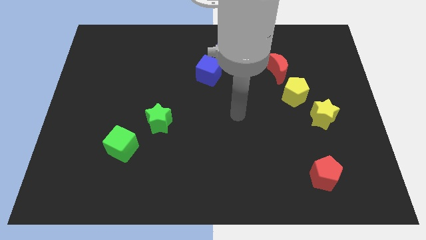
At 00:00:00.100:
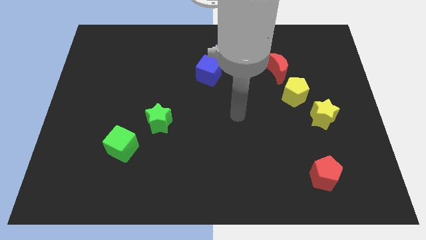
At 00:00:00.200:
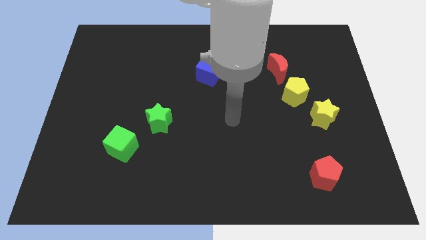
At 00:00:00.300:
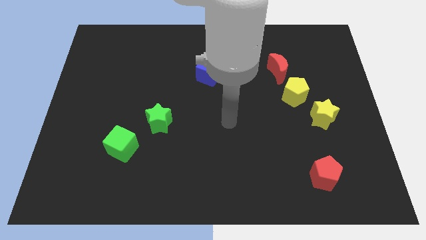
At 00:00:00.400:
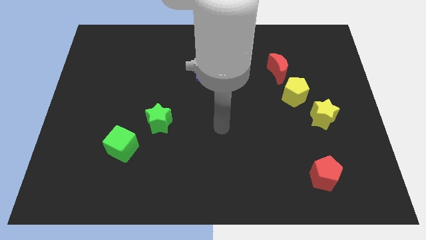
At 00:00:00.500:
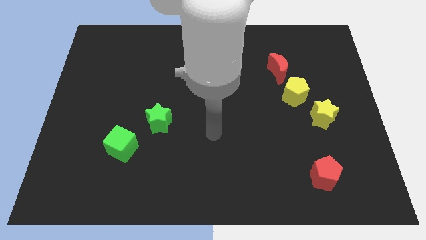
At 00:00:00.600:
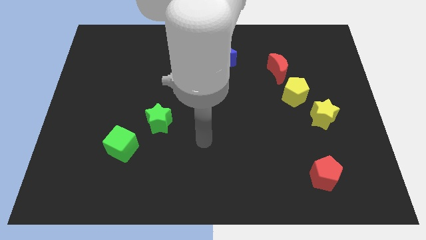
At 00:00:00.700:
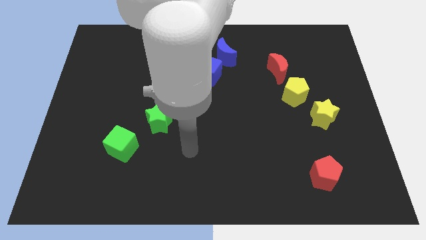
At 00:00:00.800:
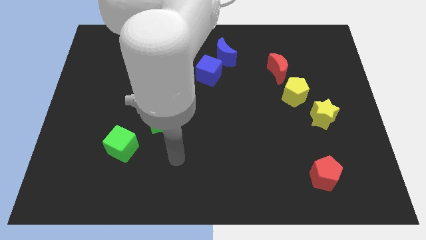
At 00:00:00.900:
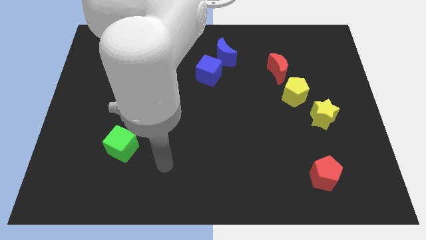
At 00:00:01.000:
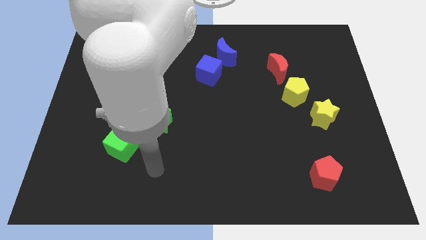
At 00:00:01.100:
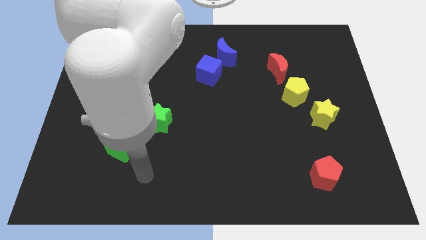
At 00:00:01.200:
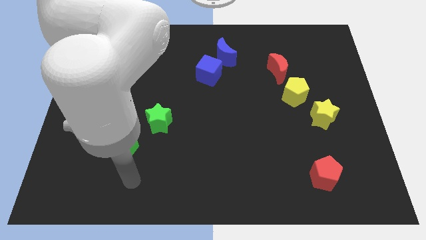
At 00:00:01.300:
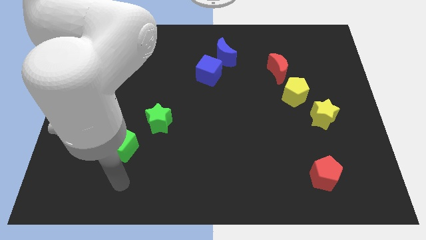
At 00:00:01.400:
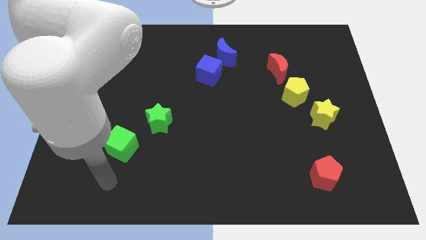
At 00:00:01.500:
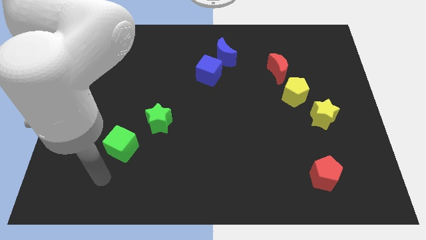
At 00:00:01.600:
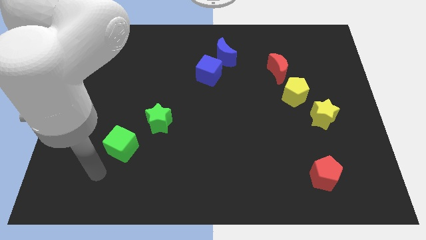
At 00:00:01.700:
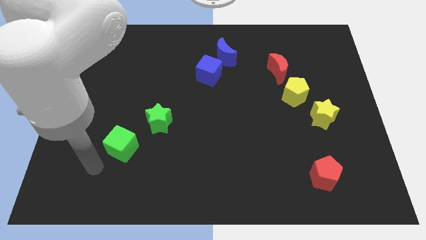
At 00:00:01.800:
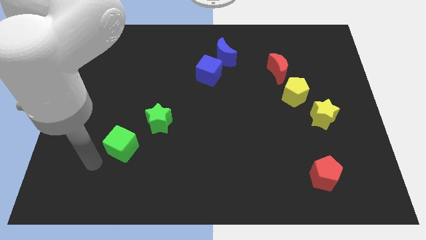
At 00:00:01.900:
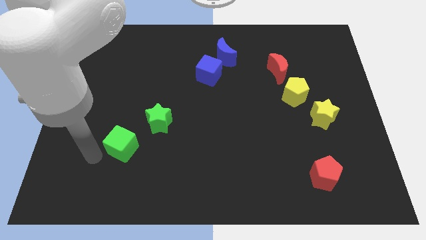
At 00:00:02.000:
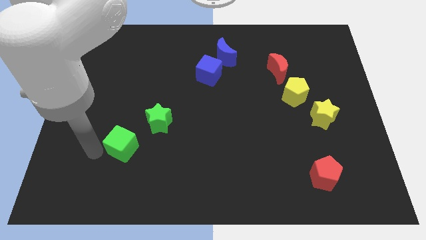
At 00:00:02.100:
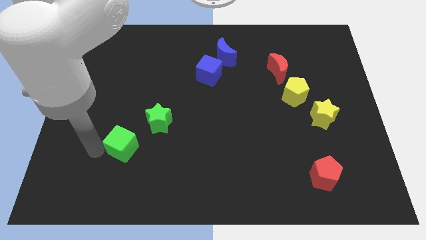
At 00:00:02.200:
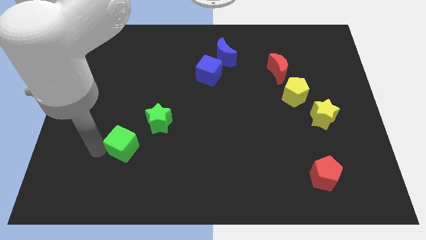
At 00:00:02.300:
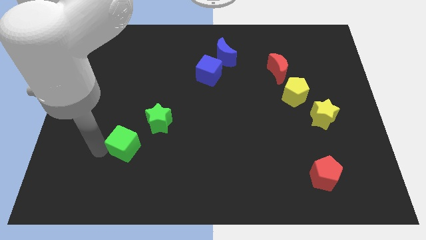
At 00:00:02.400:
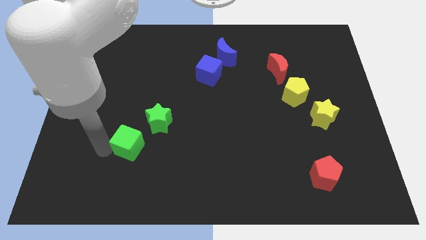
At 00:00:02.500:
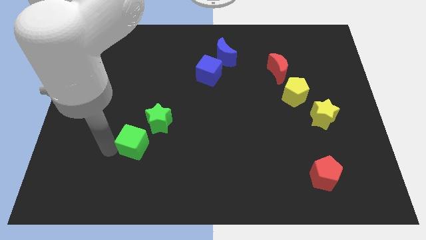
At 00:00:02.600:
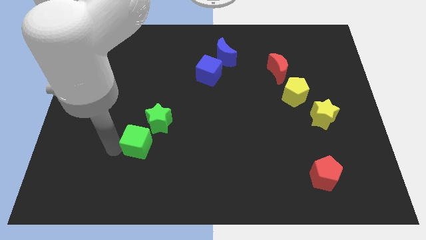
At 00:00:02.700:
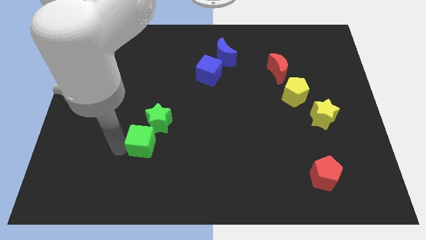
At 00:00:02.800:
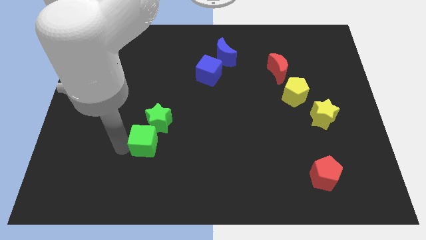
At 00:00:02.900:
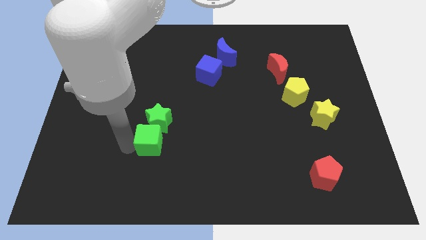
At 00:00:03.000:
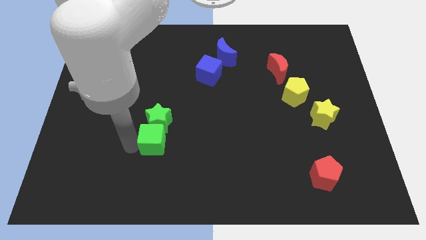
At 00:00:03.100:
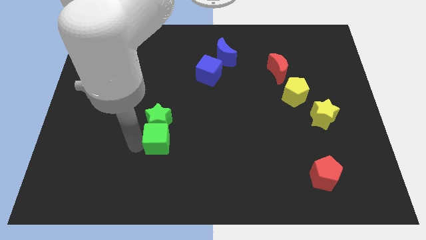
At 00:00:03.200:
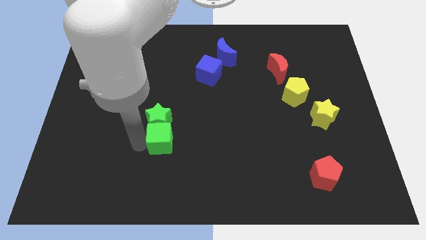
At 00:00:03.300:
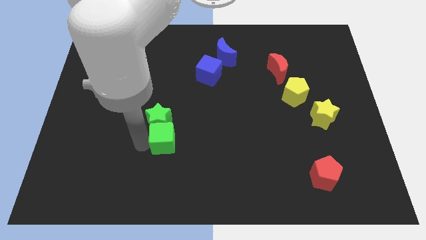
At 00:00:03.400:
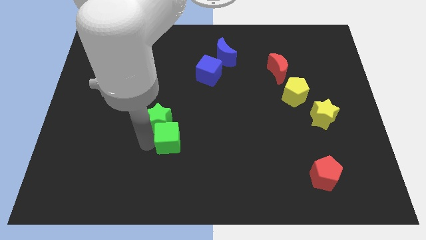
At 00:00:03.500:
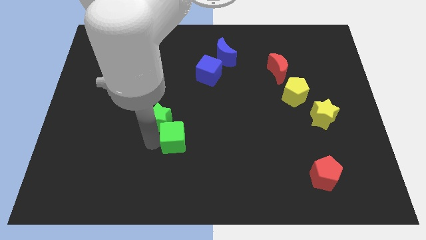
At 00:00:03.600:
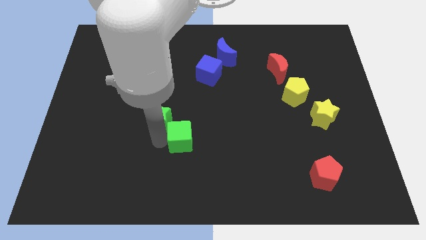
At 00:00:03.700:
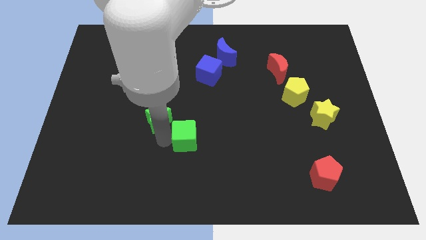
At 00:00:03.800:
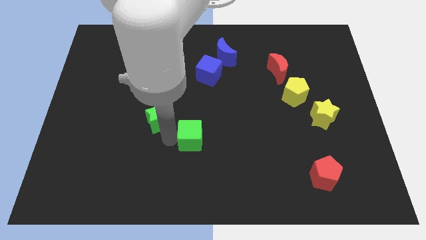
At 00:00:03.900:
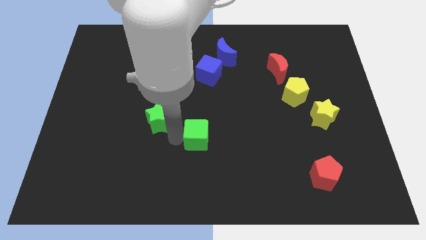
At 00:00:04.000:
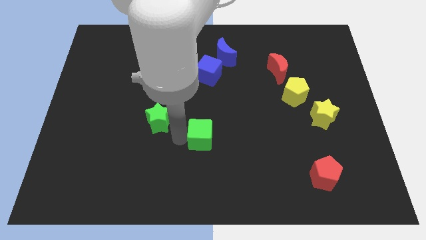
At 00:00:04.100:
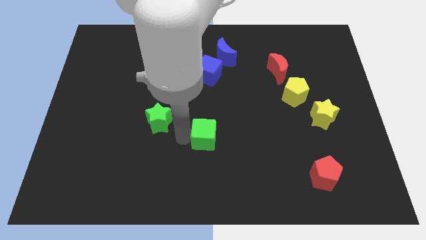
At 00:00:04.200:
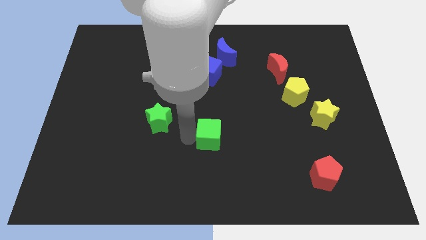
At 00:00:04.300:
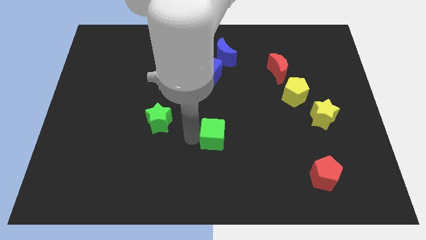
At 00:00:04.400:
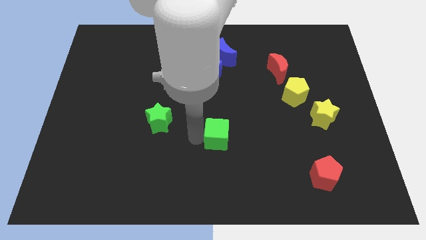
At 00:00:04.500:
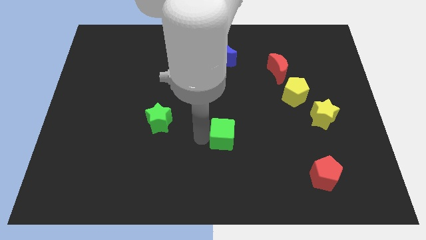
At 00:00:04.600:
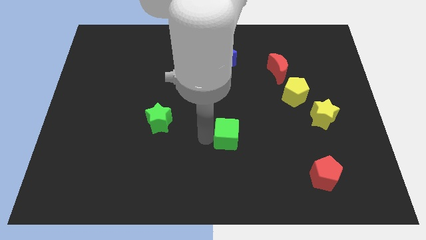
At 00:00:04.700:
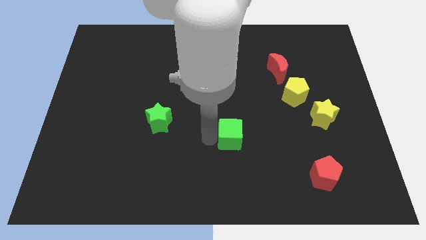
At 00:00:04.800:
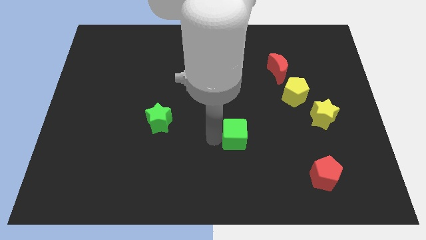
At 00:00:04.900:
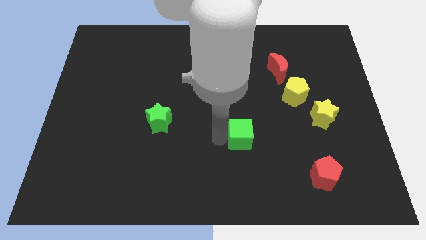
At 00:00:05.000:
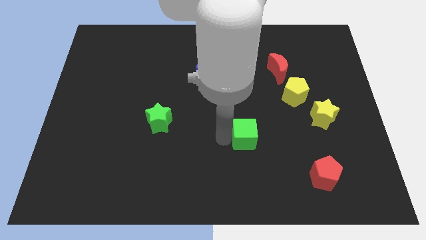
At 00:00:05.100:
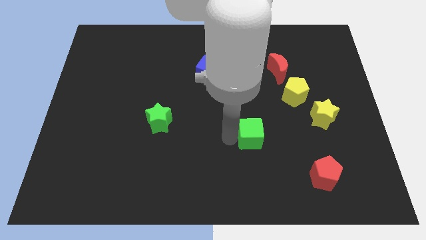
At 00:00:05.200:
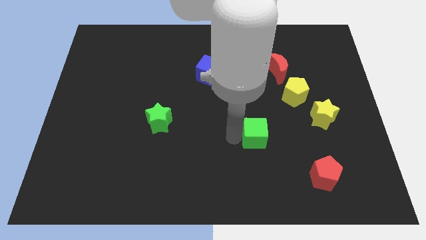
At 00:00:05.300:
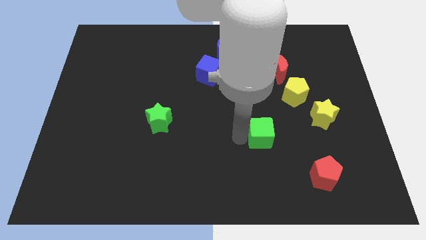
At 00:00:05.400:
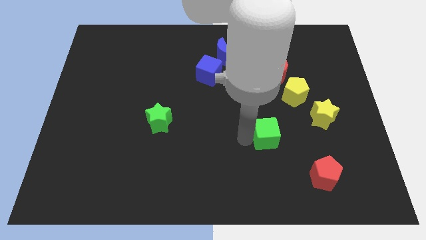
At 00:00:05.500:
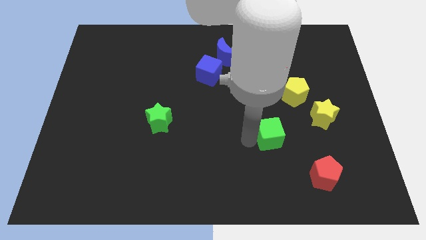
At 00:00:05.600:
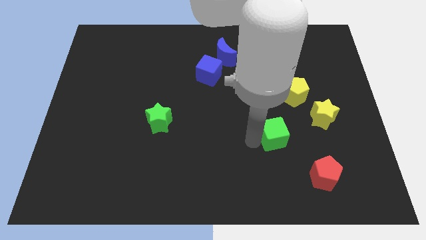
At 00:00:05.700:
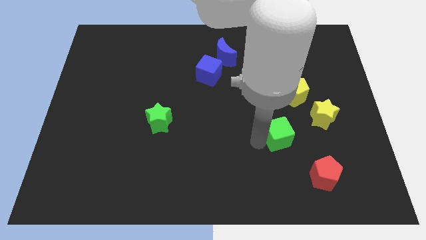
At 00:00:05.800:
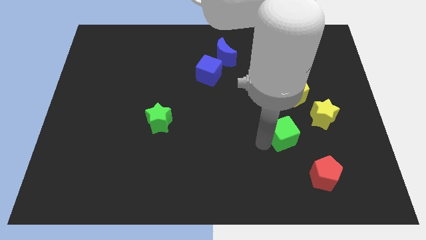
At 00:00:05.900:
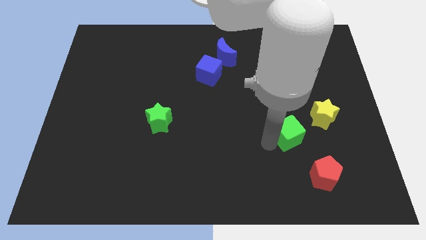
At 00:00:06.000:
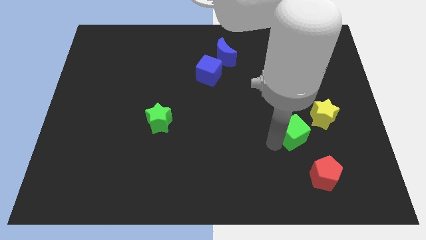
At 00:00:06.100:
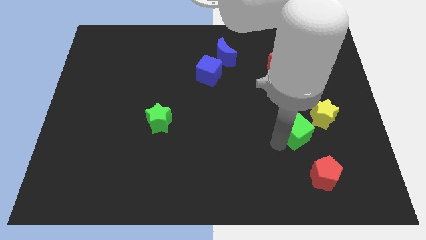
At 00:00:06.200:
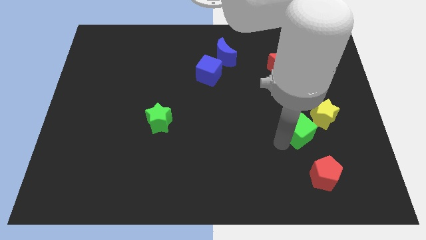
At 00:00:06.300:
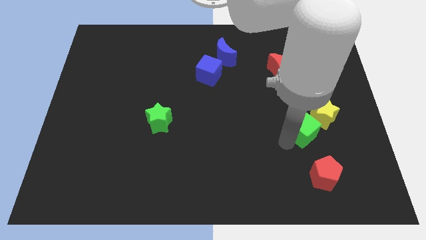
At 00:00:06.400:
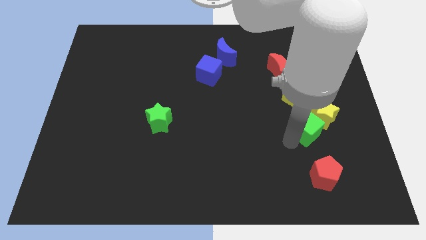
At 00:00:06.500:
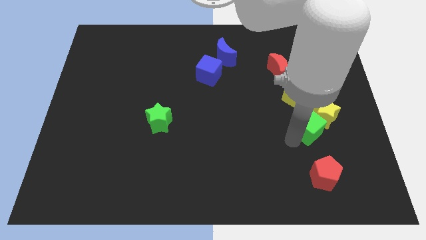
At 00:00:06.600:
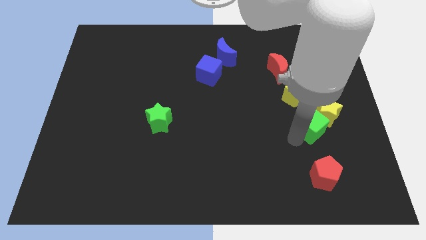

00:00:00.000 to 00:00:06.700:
slide the green cube towards the yellow star

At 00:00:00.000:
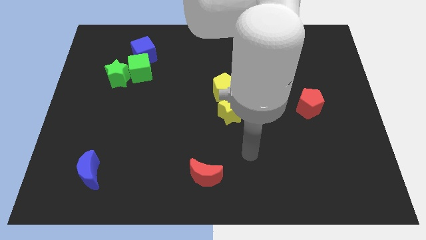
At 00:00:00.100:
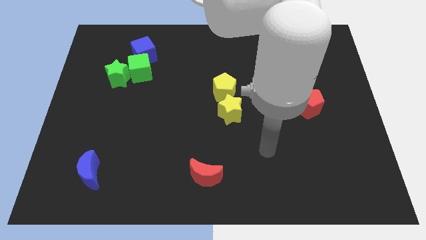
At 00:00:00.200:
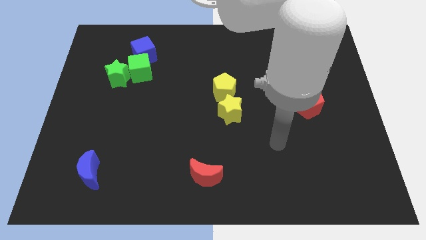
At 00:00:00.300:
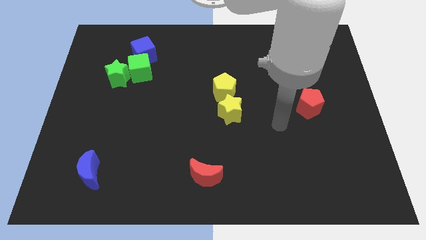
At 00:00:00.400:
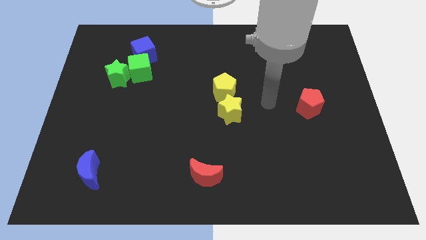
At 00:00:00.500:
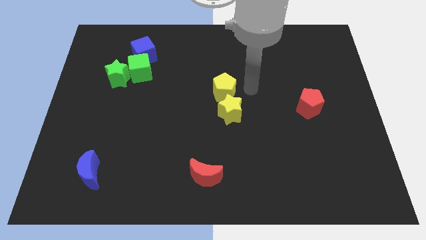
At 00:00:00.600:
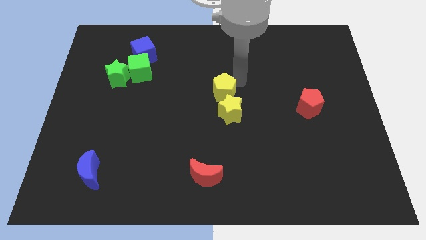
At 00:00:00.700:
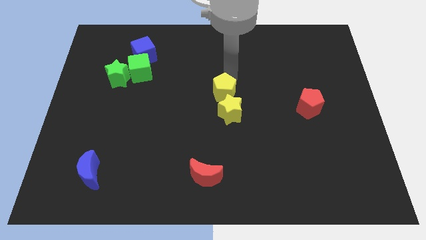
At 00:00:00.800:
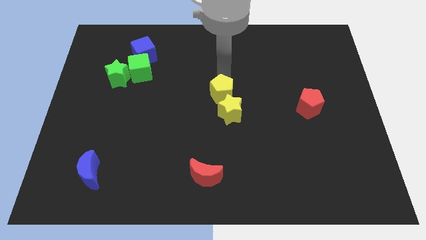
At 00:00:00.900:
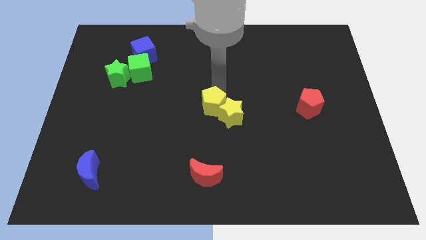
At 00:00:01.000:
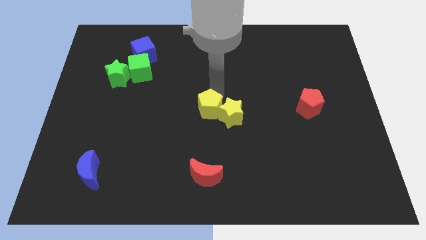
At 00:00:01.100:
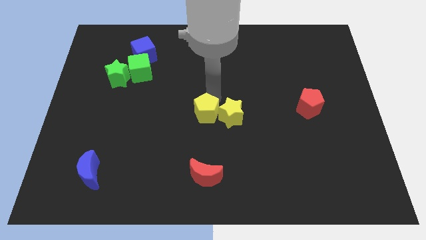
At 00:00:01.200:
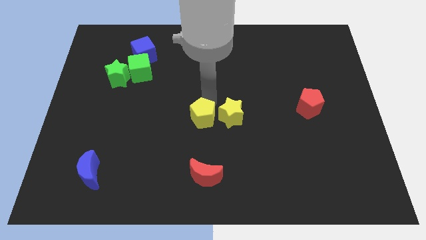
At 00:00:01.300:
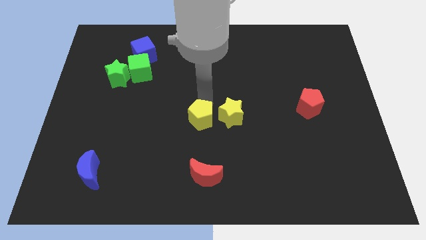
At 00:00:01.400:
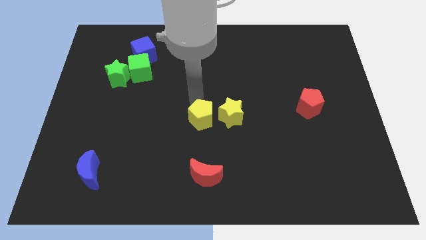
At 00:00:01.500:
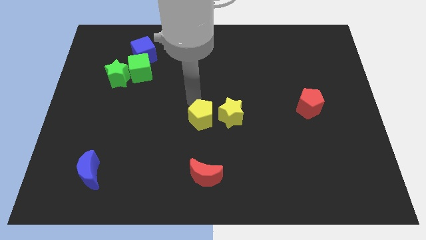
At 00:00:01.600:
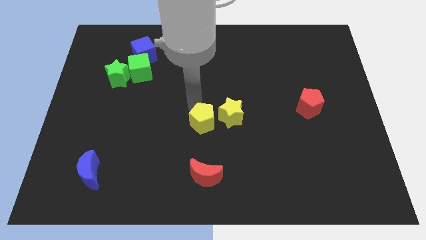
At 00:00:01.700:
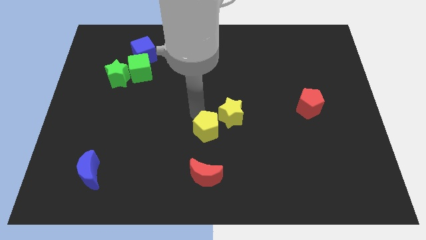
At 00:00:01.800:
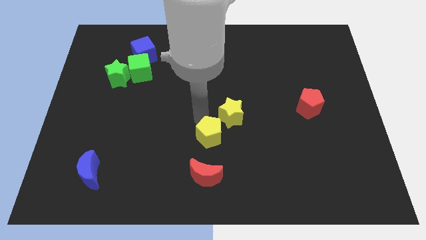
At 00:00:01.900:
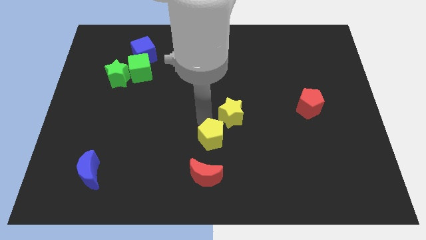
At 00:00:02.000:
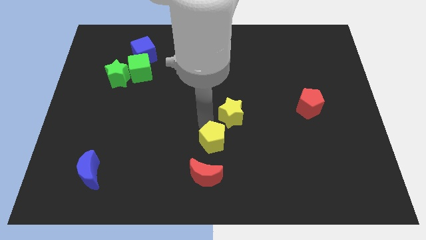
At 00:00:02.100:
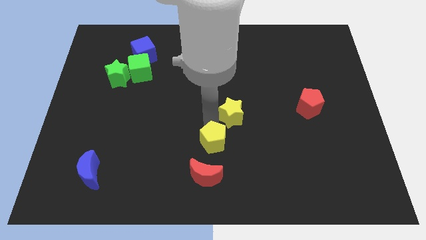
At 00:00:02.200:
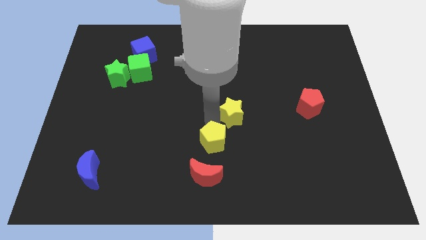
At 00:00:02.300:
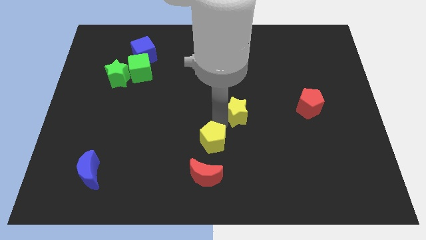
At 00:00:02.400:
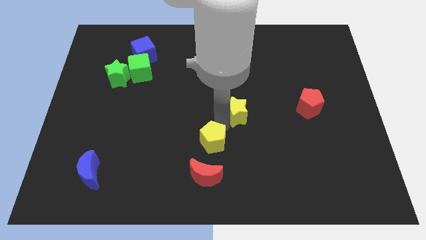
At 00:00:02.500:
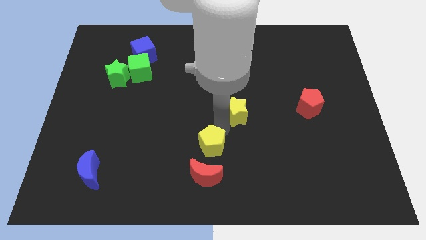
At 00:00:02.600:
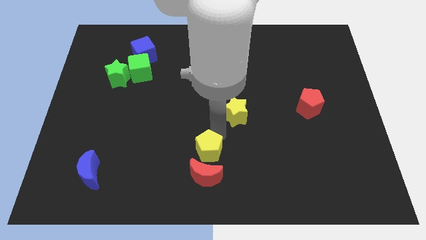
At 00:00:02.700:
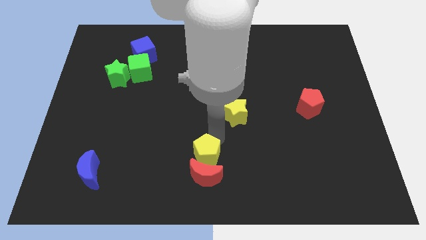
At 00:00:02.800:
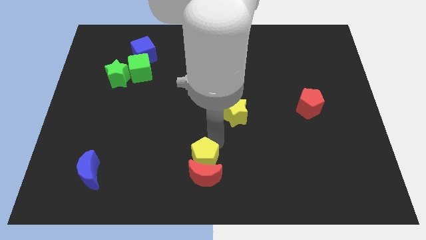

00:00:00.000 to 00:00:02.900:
put the yellow pentagon towards the red moon
